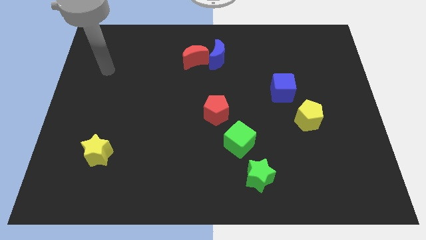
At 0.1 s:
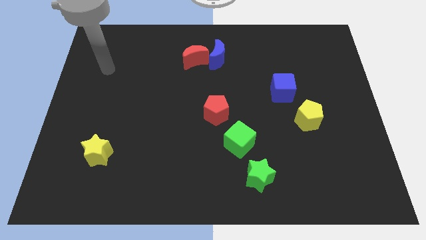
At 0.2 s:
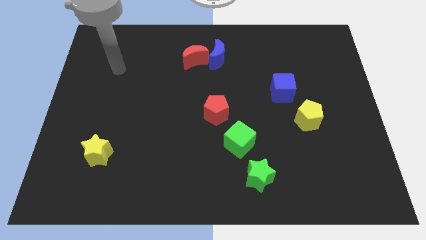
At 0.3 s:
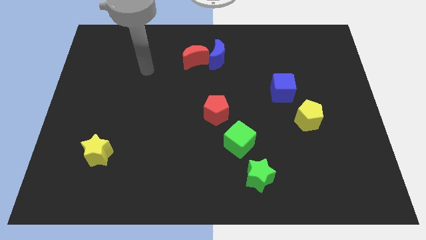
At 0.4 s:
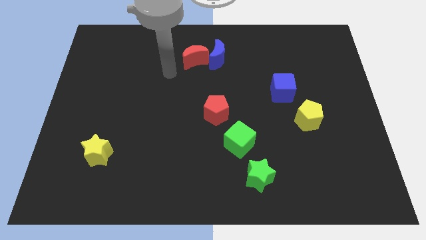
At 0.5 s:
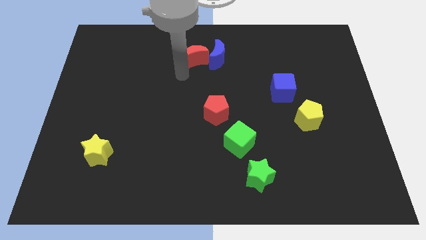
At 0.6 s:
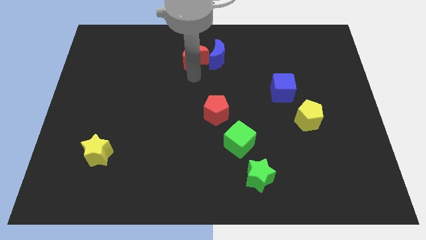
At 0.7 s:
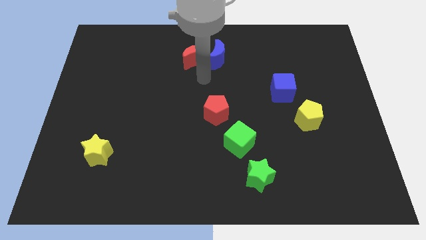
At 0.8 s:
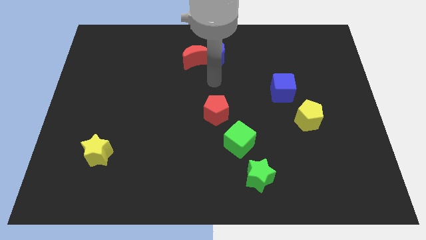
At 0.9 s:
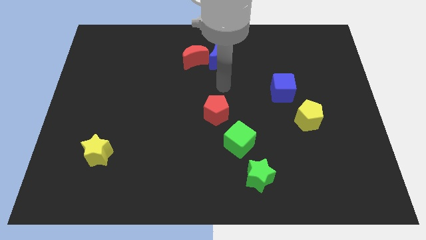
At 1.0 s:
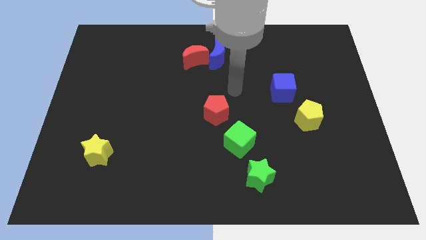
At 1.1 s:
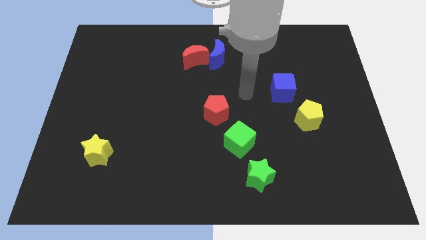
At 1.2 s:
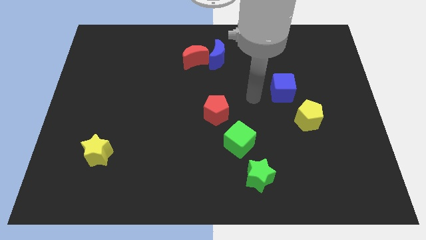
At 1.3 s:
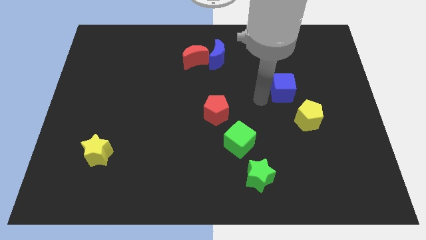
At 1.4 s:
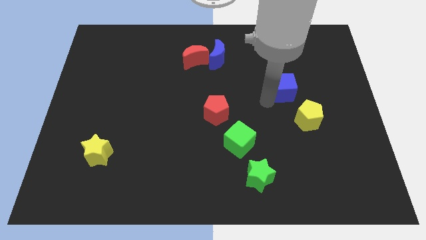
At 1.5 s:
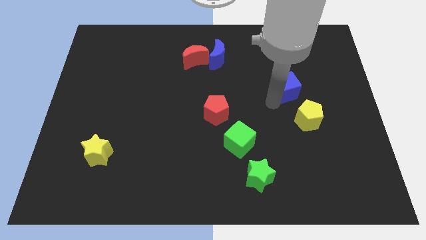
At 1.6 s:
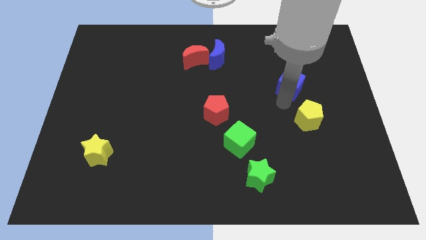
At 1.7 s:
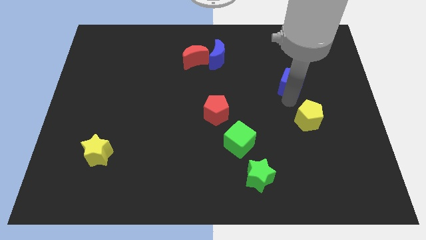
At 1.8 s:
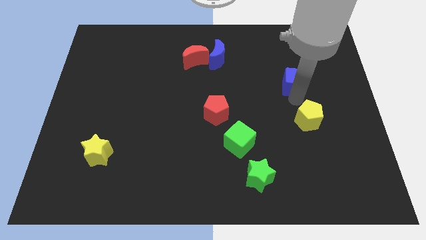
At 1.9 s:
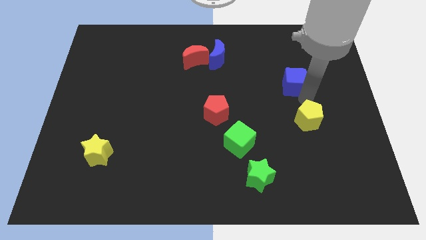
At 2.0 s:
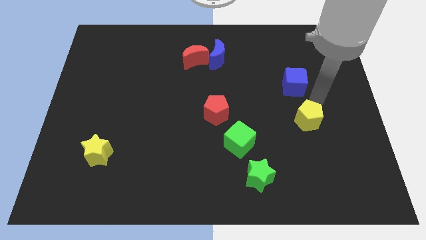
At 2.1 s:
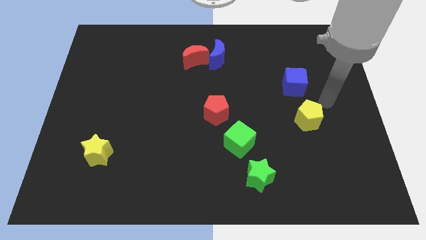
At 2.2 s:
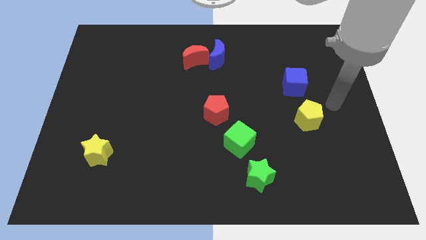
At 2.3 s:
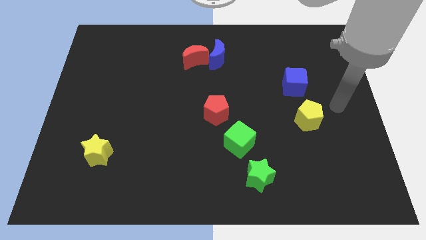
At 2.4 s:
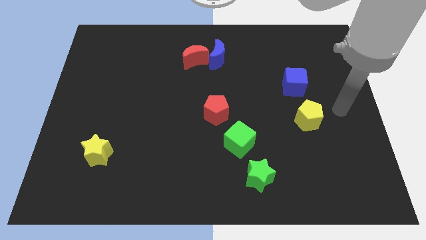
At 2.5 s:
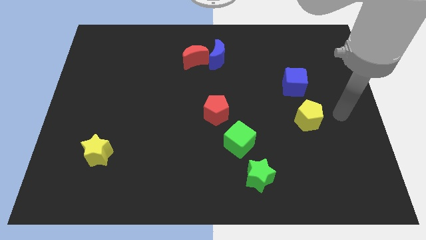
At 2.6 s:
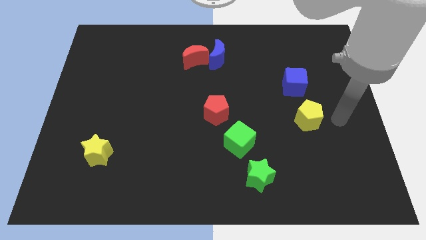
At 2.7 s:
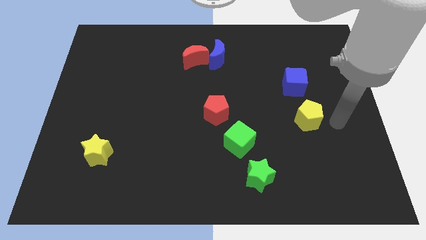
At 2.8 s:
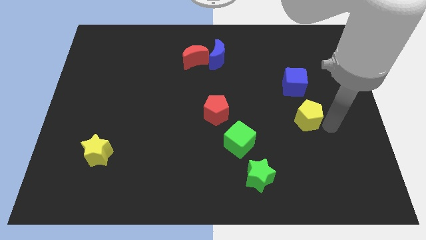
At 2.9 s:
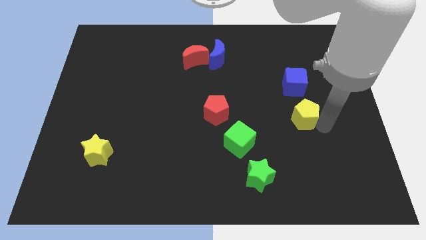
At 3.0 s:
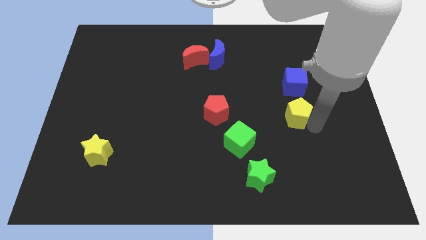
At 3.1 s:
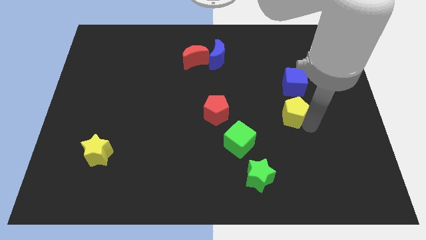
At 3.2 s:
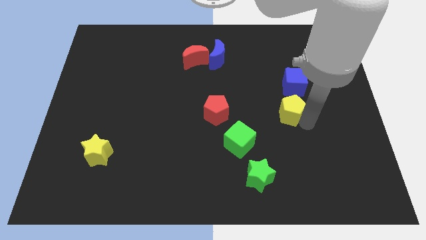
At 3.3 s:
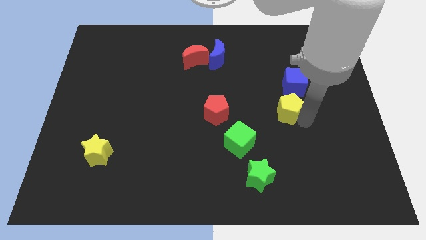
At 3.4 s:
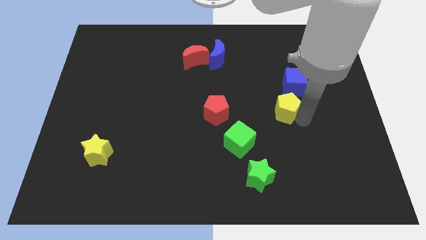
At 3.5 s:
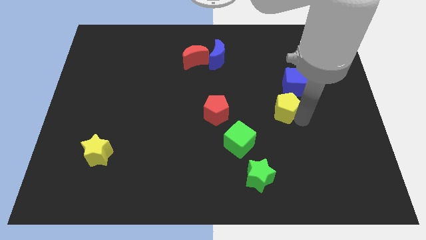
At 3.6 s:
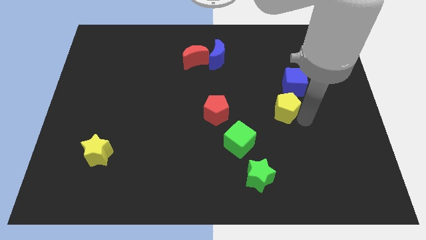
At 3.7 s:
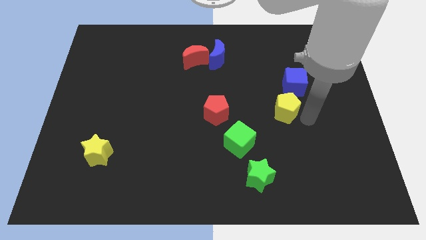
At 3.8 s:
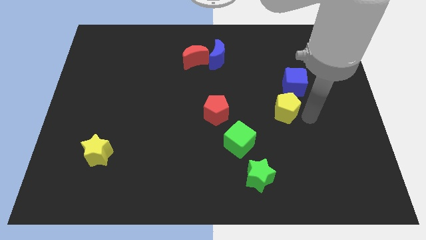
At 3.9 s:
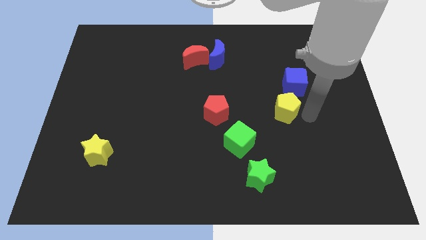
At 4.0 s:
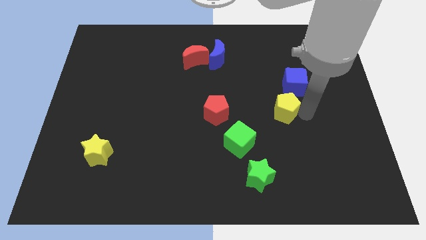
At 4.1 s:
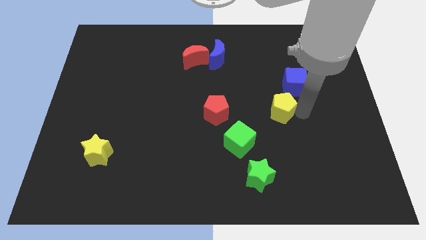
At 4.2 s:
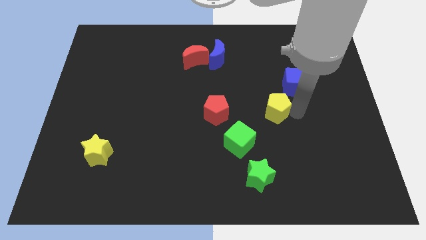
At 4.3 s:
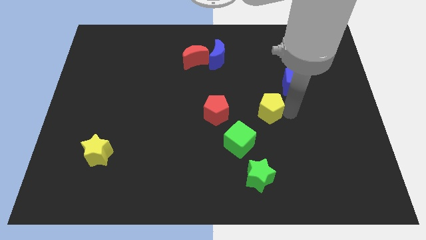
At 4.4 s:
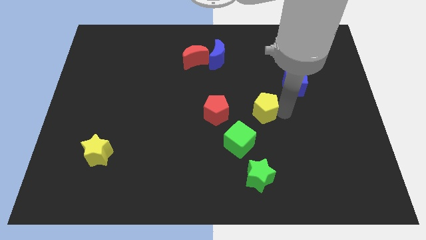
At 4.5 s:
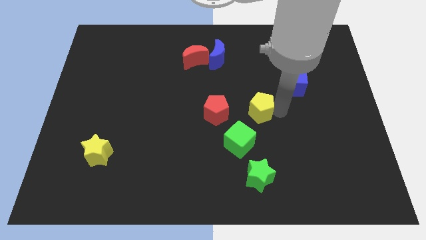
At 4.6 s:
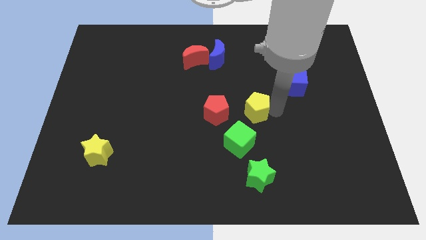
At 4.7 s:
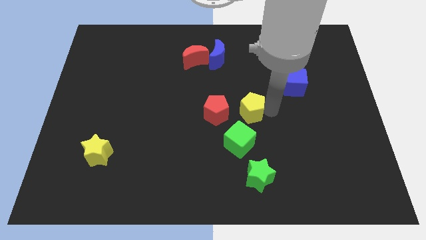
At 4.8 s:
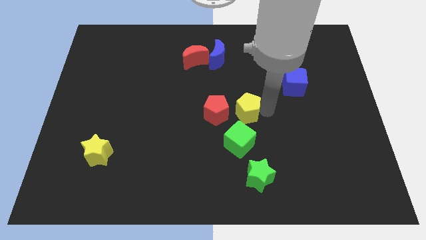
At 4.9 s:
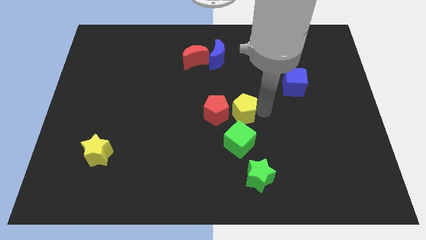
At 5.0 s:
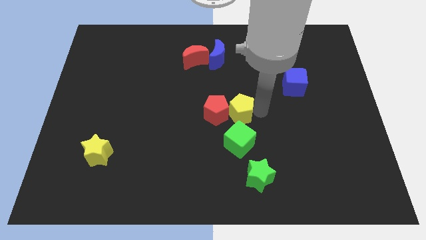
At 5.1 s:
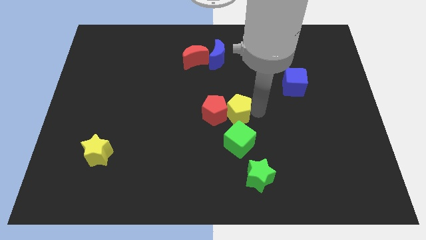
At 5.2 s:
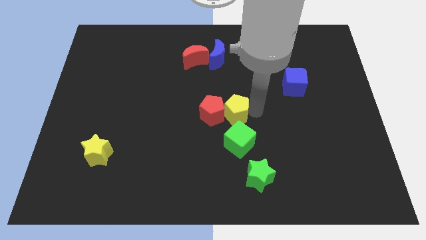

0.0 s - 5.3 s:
push the yellow pentagon close to the red pentagon

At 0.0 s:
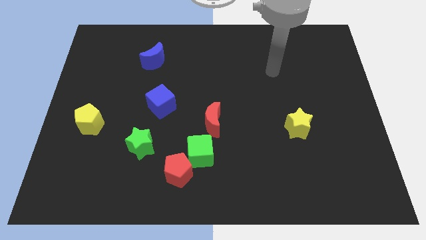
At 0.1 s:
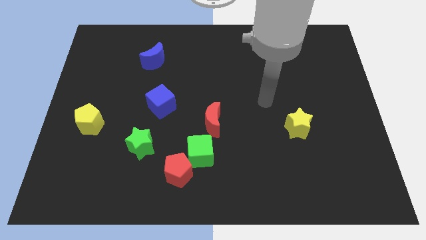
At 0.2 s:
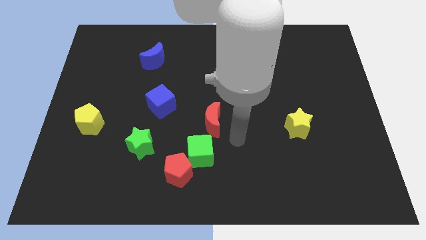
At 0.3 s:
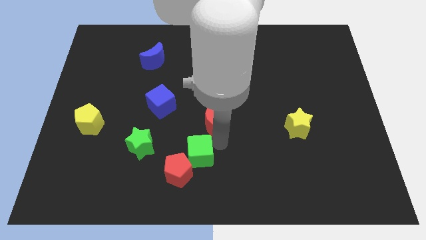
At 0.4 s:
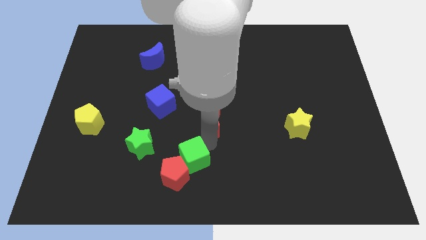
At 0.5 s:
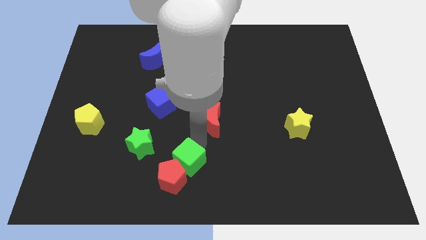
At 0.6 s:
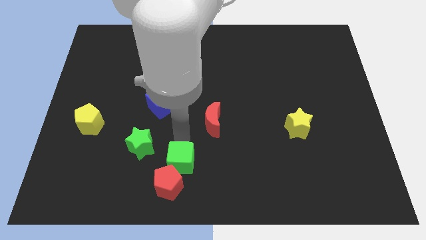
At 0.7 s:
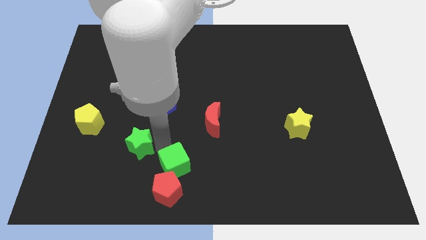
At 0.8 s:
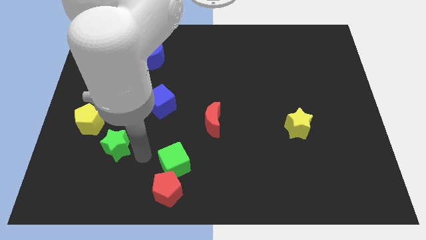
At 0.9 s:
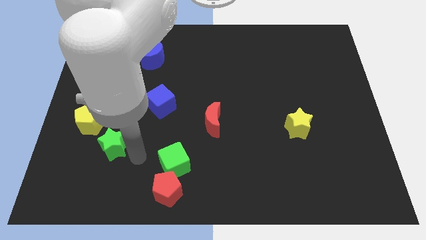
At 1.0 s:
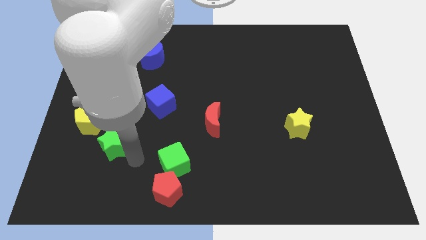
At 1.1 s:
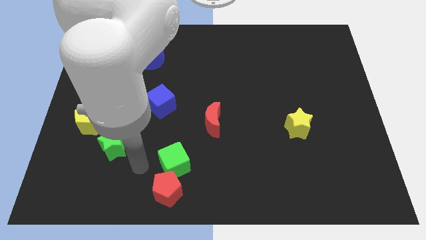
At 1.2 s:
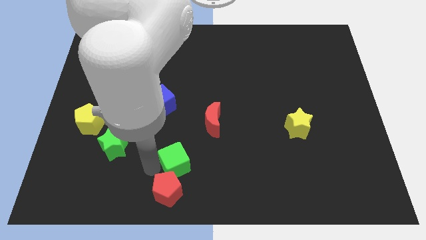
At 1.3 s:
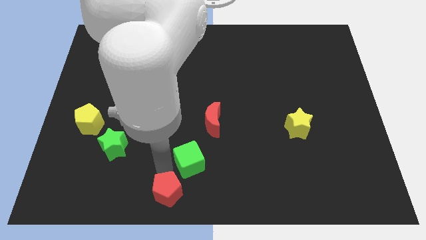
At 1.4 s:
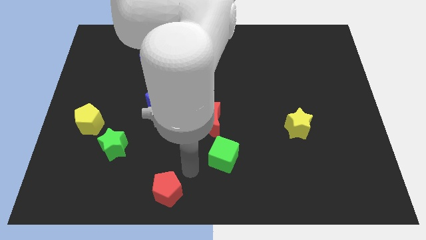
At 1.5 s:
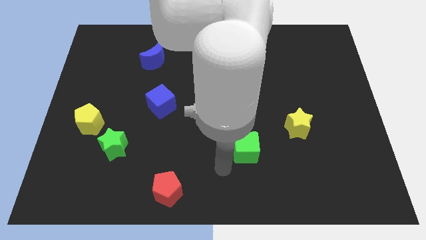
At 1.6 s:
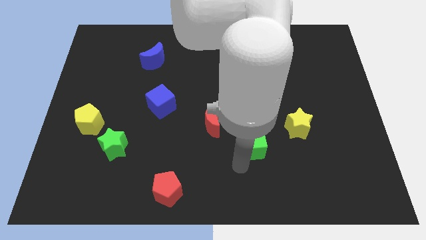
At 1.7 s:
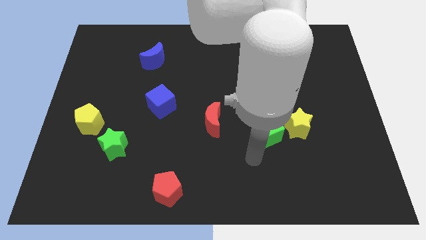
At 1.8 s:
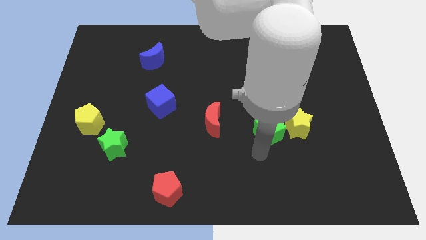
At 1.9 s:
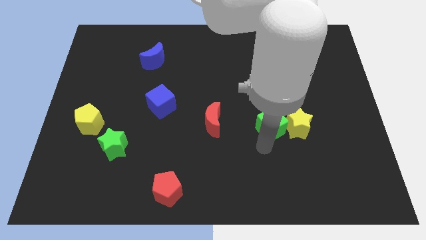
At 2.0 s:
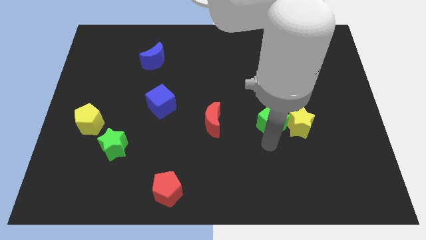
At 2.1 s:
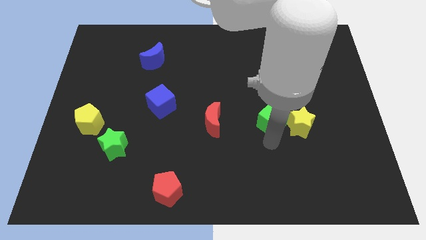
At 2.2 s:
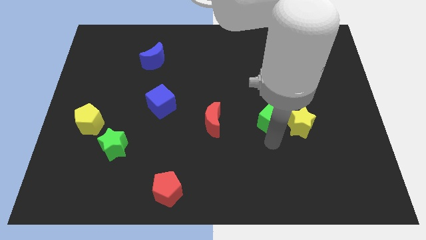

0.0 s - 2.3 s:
move the green cube close to the yellow star

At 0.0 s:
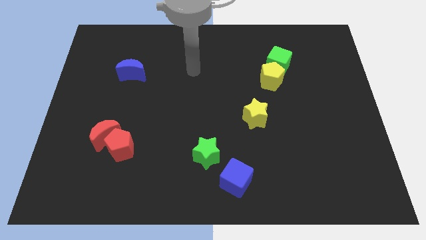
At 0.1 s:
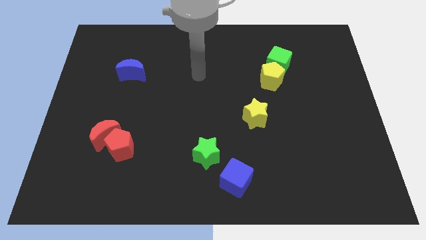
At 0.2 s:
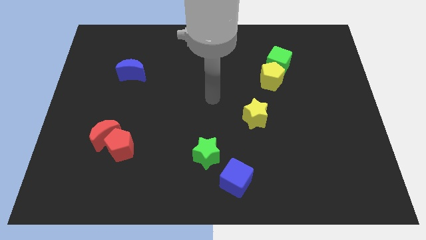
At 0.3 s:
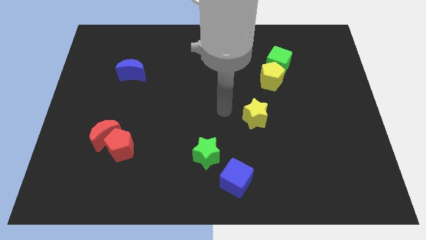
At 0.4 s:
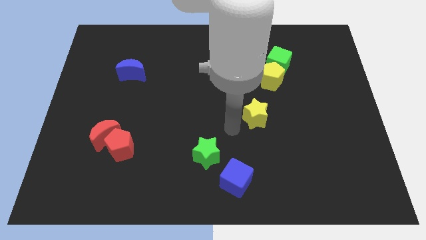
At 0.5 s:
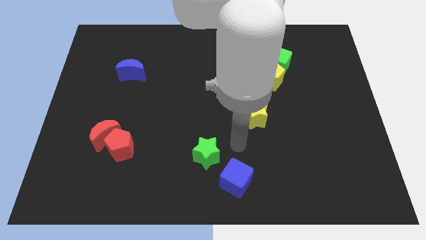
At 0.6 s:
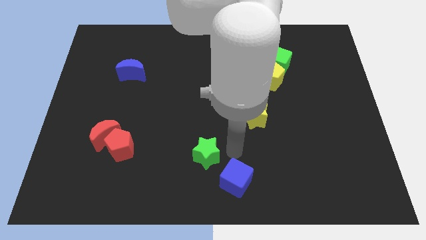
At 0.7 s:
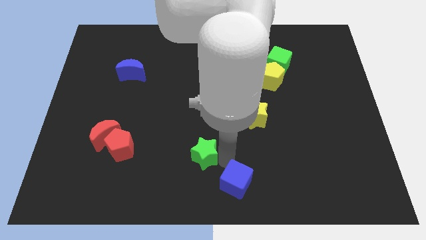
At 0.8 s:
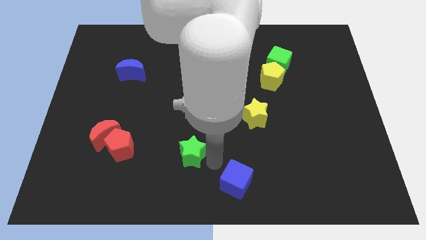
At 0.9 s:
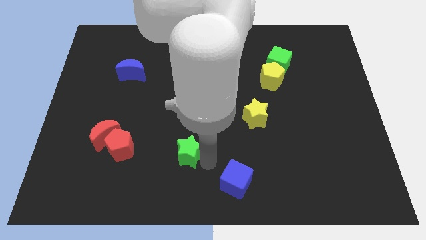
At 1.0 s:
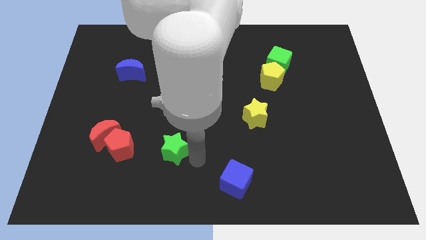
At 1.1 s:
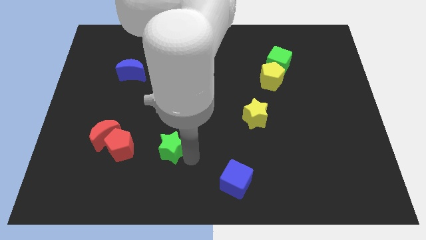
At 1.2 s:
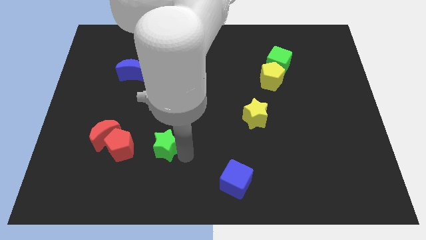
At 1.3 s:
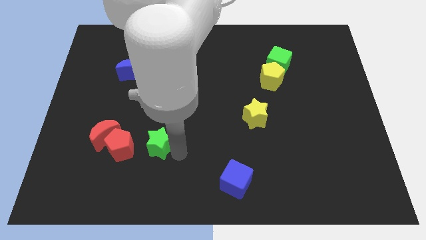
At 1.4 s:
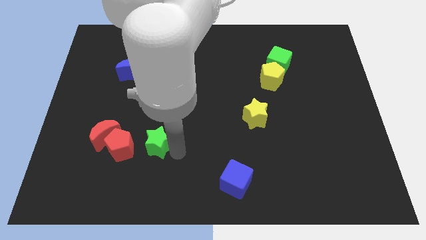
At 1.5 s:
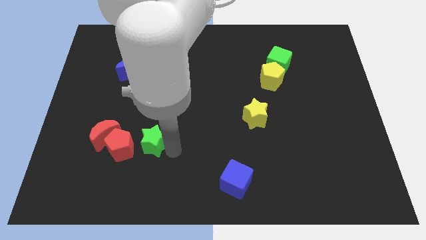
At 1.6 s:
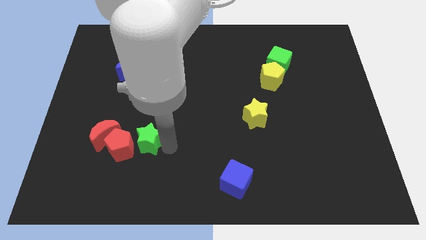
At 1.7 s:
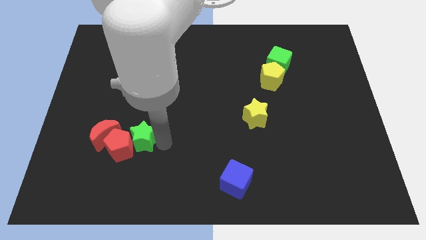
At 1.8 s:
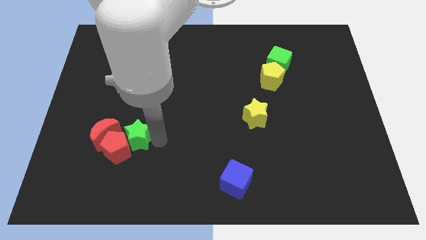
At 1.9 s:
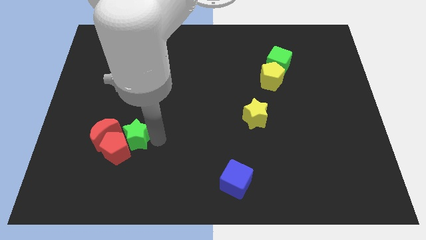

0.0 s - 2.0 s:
move the green star to the red pentagon
